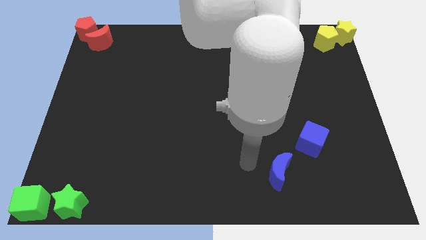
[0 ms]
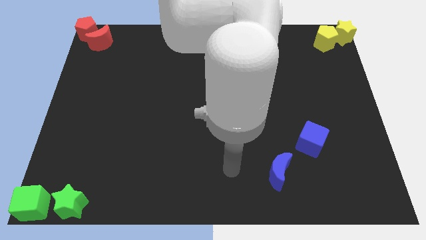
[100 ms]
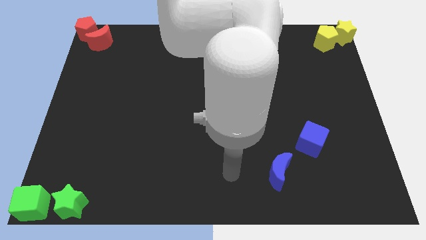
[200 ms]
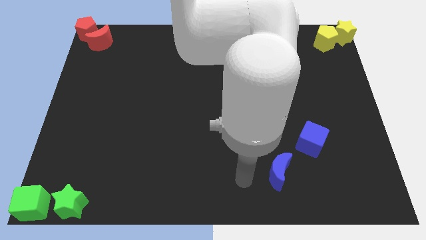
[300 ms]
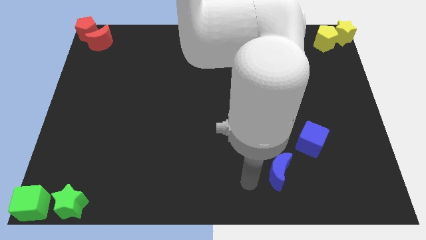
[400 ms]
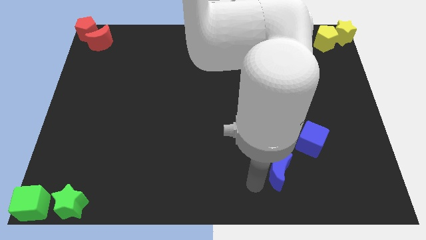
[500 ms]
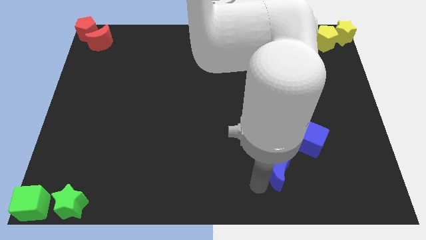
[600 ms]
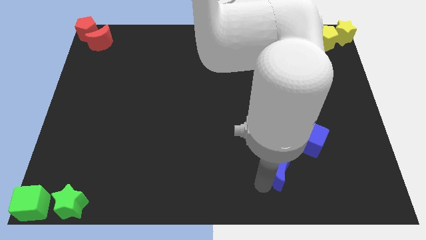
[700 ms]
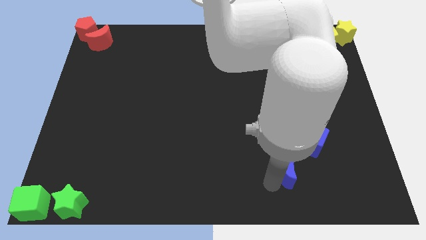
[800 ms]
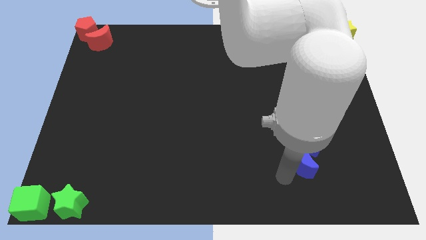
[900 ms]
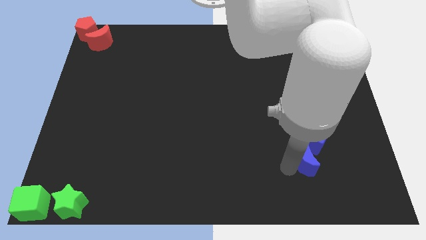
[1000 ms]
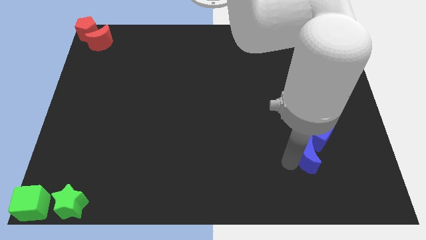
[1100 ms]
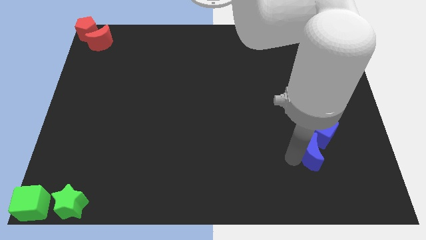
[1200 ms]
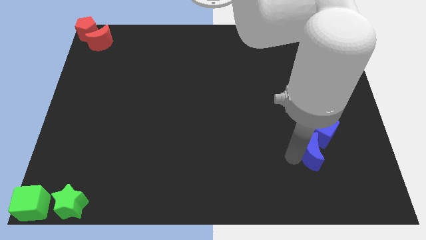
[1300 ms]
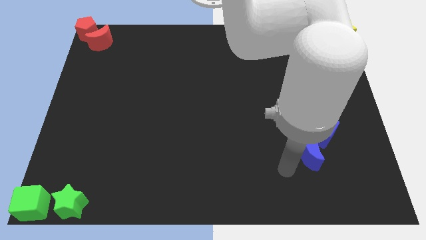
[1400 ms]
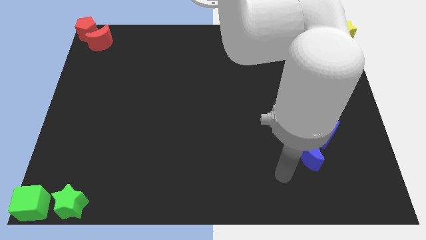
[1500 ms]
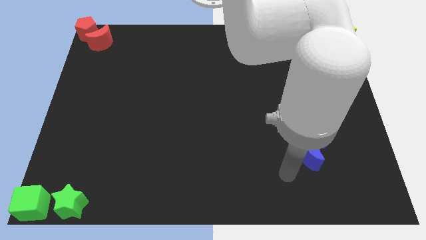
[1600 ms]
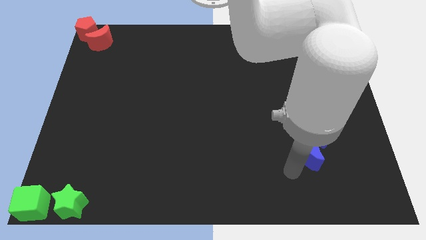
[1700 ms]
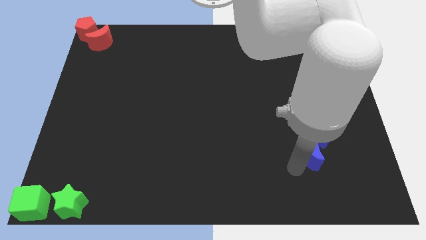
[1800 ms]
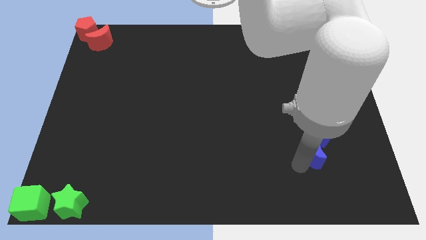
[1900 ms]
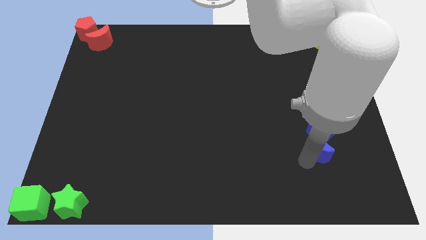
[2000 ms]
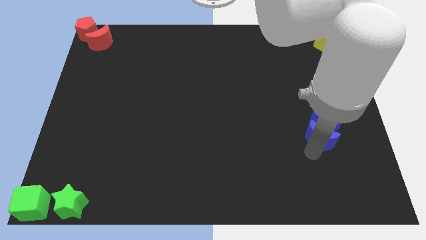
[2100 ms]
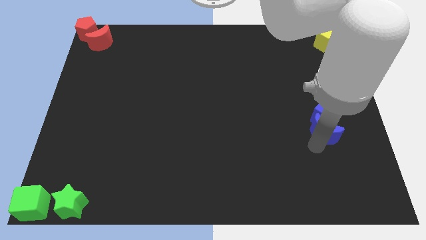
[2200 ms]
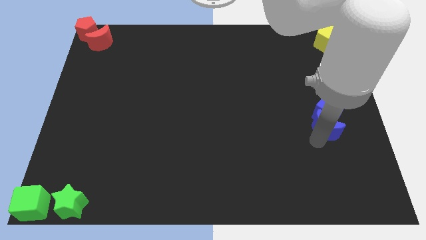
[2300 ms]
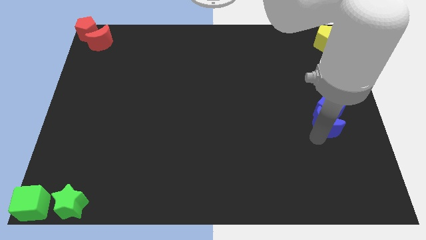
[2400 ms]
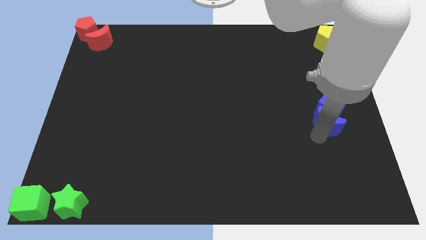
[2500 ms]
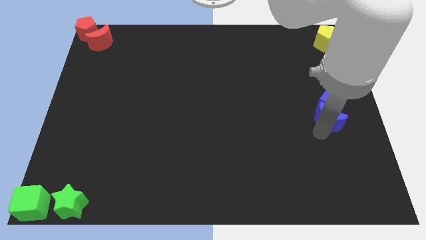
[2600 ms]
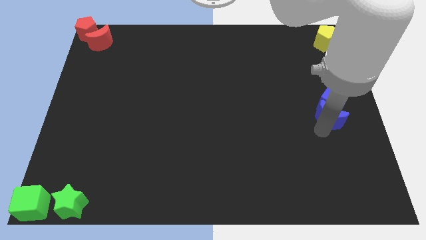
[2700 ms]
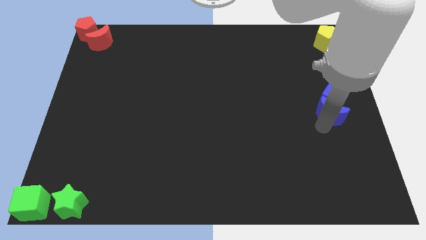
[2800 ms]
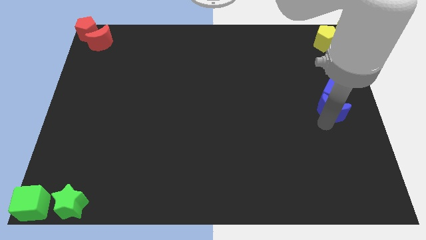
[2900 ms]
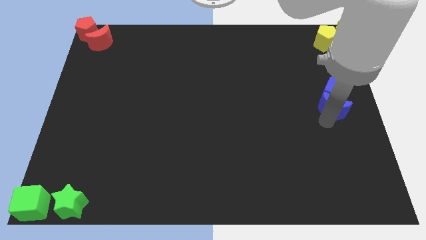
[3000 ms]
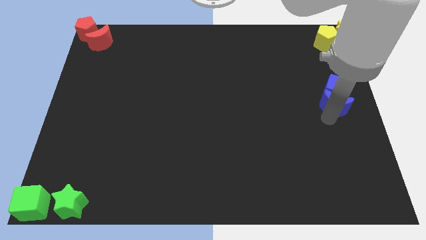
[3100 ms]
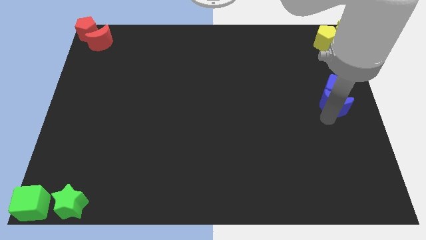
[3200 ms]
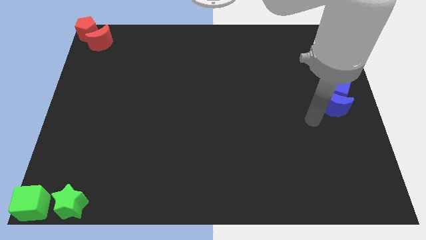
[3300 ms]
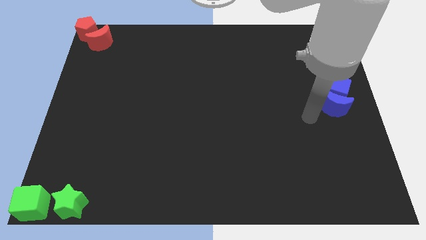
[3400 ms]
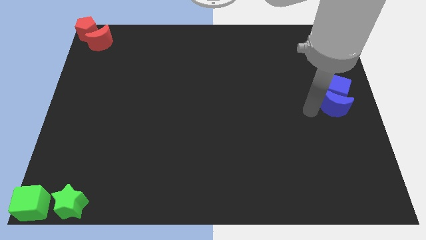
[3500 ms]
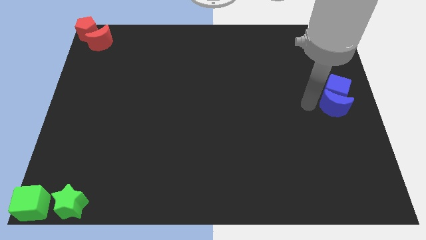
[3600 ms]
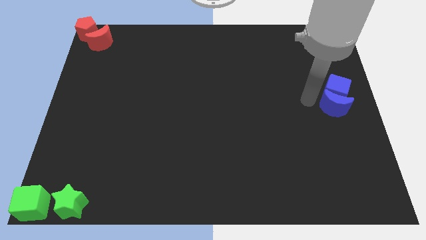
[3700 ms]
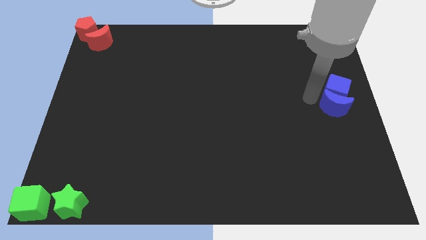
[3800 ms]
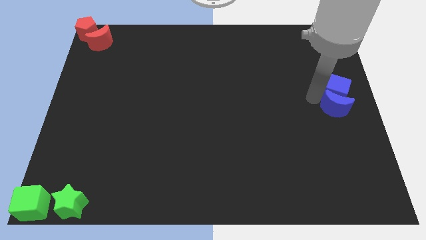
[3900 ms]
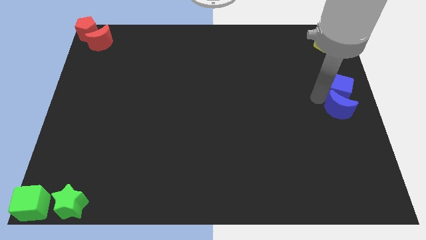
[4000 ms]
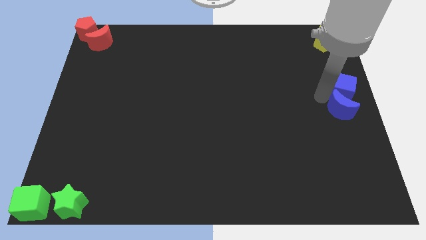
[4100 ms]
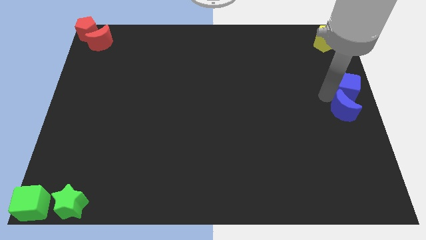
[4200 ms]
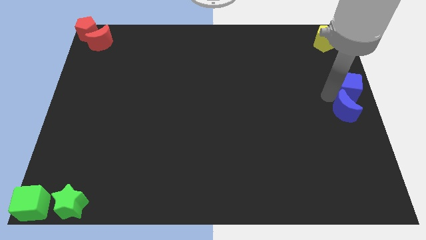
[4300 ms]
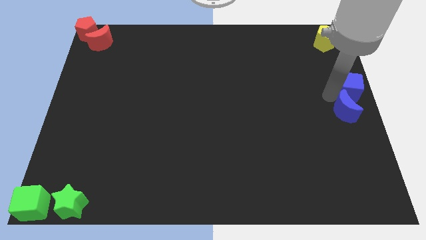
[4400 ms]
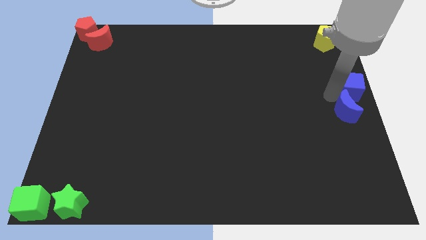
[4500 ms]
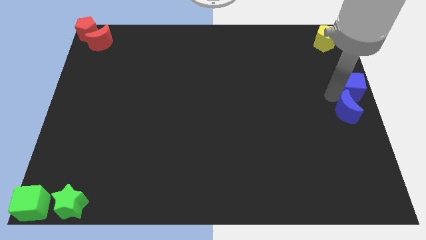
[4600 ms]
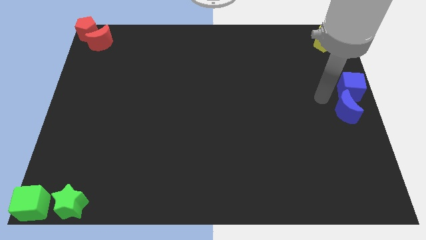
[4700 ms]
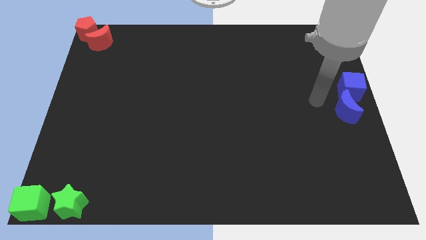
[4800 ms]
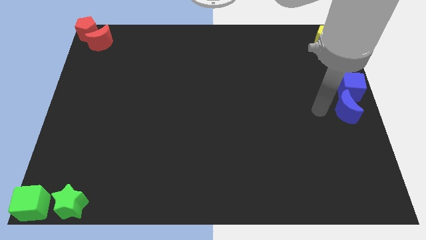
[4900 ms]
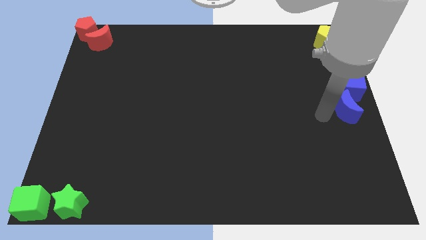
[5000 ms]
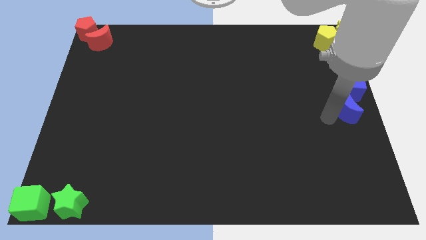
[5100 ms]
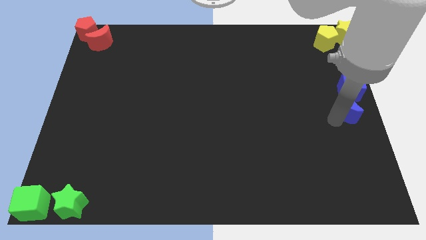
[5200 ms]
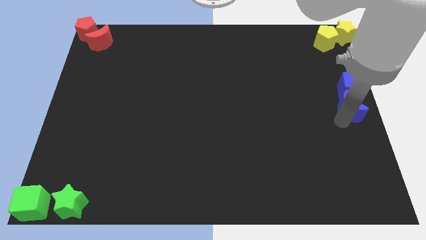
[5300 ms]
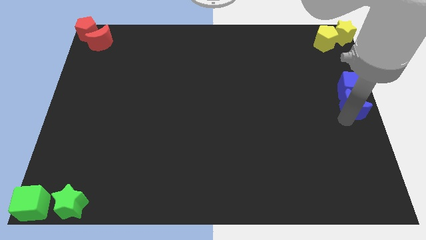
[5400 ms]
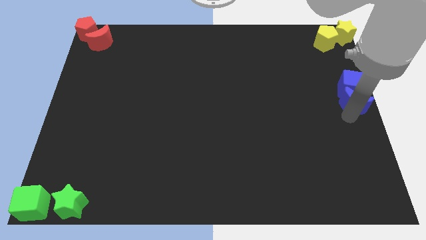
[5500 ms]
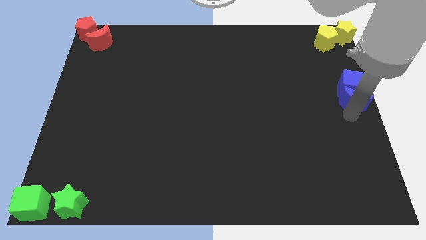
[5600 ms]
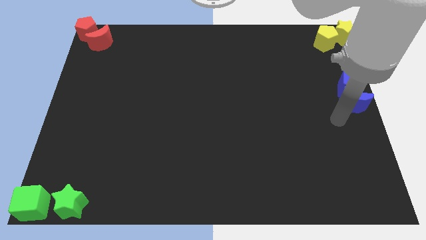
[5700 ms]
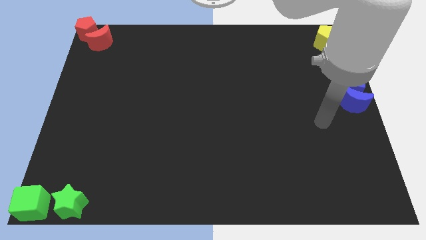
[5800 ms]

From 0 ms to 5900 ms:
move the both blue blocks to the center right

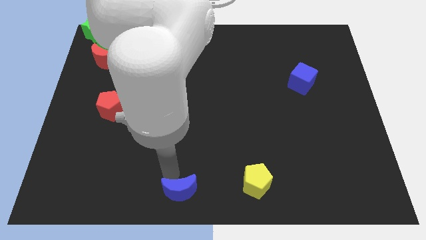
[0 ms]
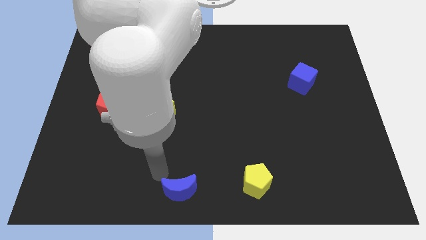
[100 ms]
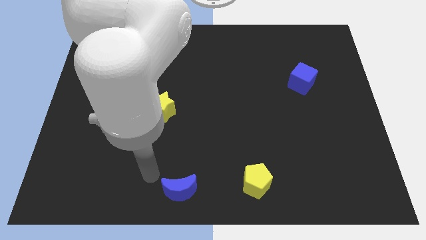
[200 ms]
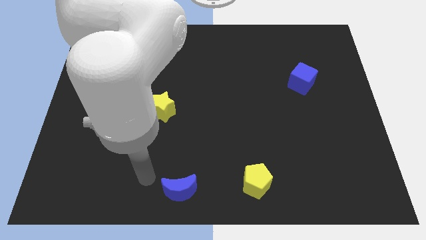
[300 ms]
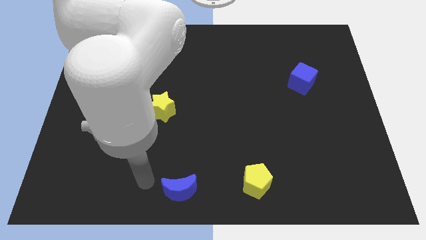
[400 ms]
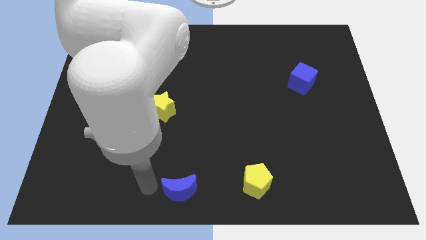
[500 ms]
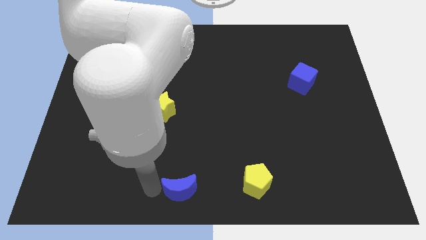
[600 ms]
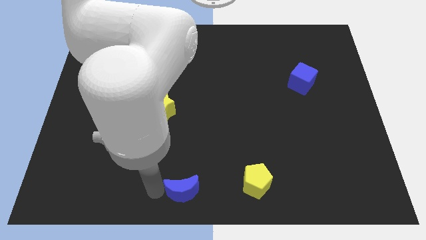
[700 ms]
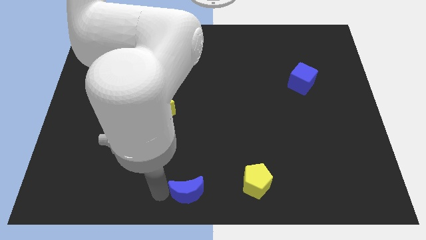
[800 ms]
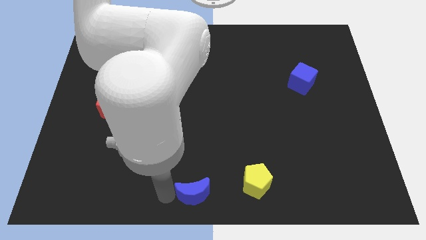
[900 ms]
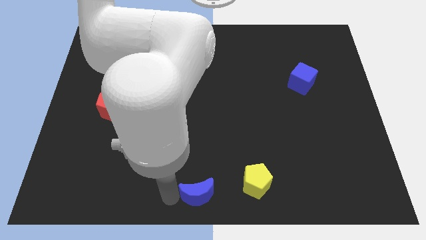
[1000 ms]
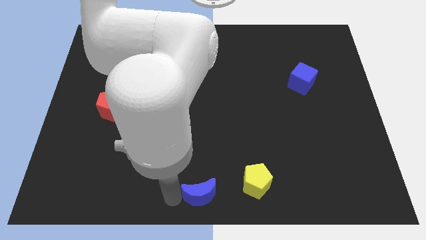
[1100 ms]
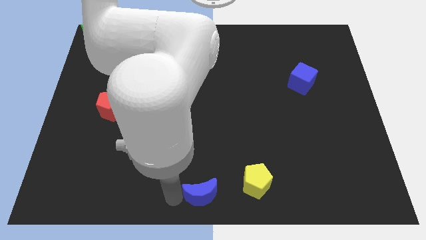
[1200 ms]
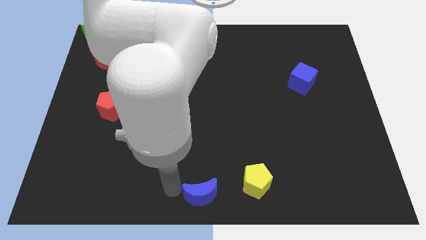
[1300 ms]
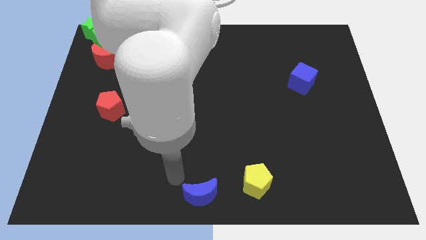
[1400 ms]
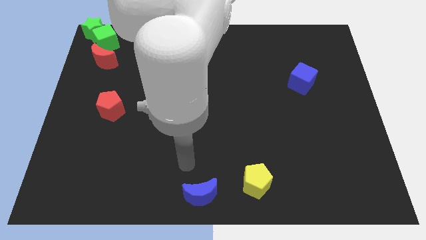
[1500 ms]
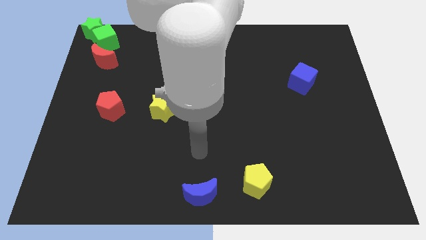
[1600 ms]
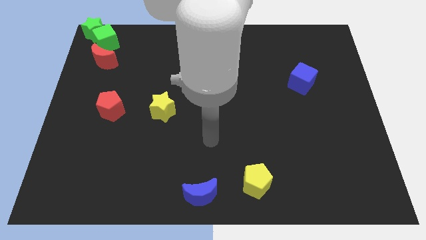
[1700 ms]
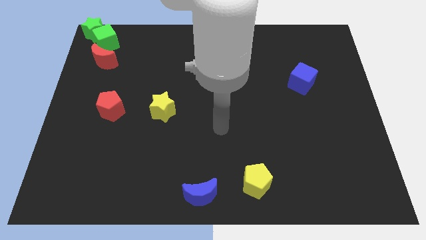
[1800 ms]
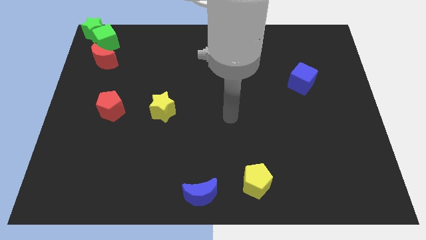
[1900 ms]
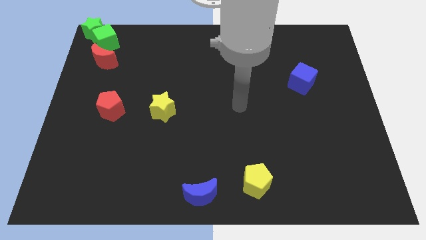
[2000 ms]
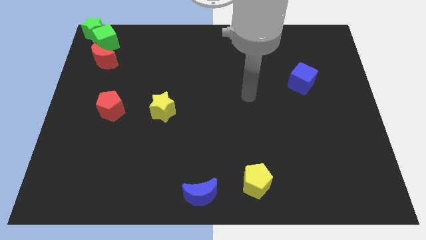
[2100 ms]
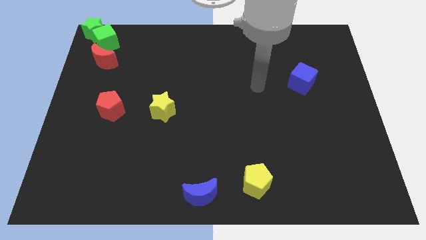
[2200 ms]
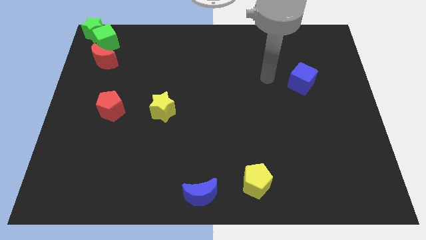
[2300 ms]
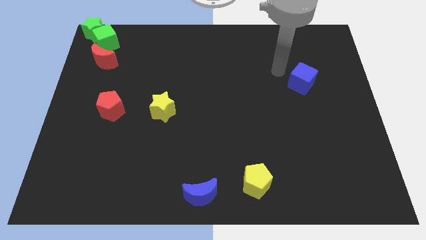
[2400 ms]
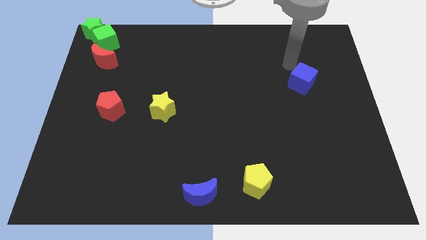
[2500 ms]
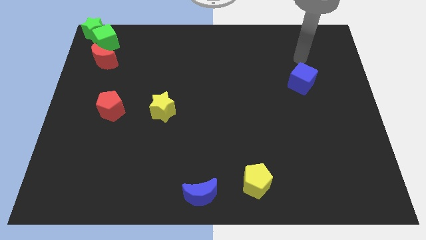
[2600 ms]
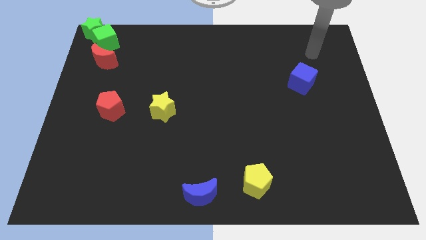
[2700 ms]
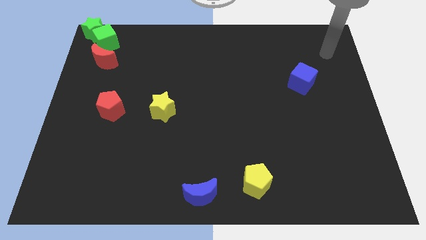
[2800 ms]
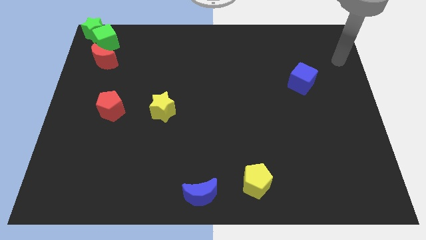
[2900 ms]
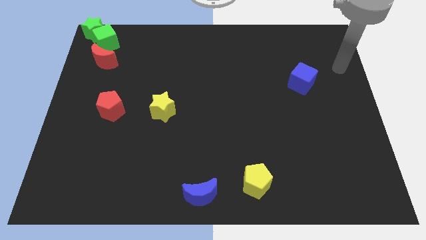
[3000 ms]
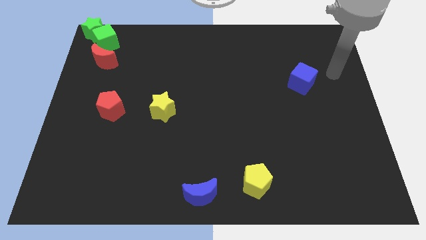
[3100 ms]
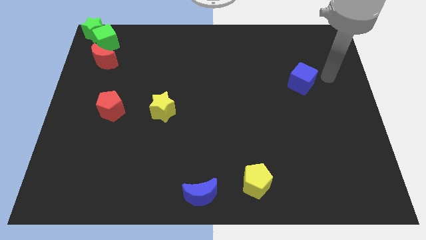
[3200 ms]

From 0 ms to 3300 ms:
move the blue moon closely to the left of the yellow pentagon

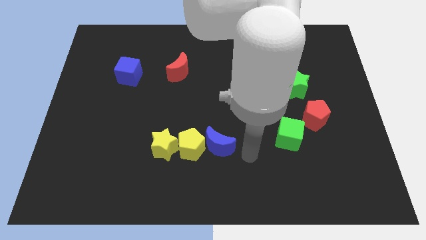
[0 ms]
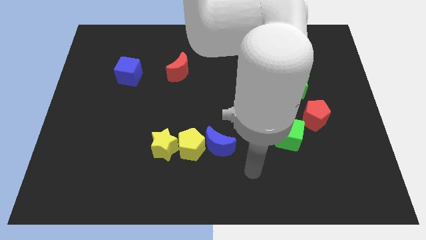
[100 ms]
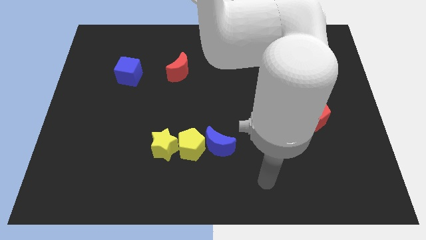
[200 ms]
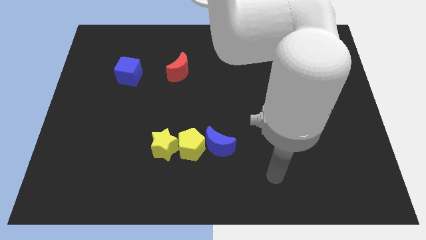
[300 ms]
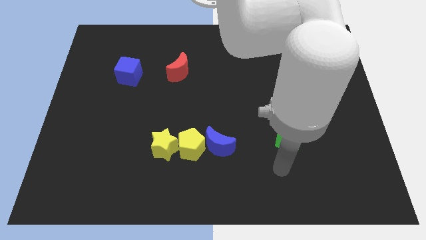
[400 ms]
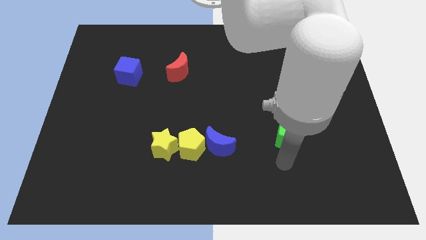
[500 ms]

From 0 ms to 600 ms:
place the arm down to the green cube
